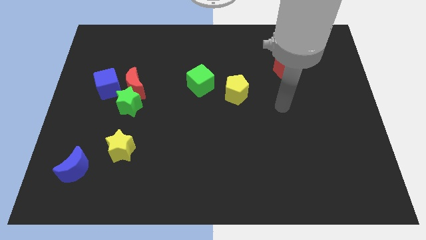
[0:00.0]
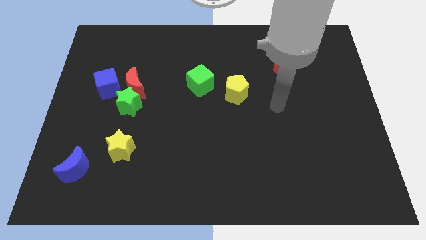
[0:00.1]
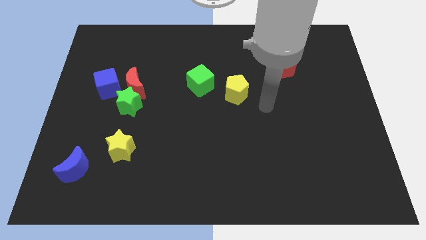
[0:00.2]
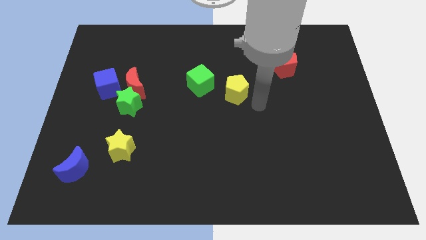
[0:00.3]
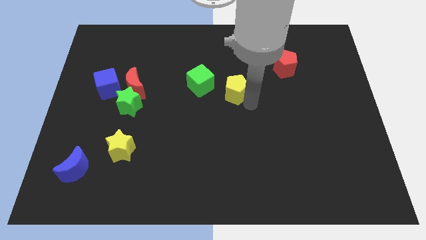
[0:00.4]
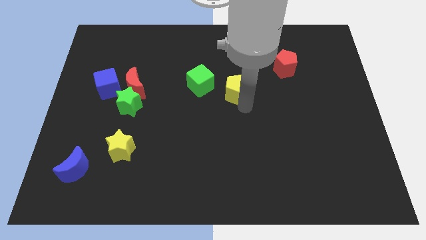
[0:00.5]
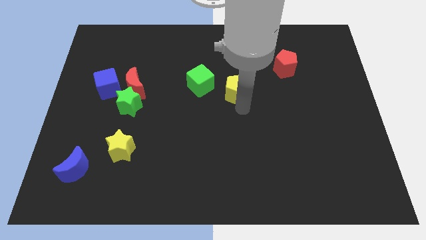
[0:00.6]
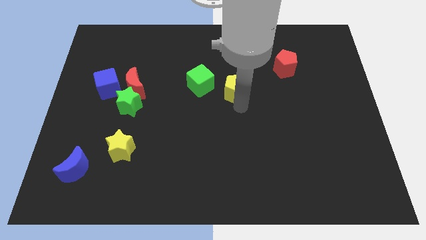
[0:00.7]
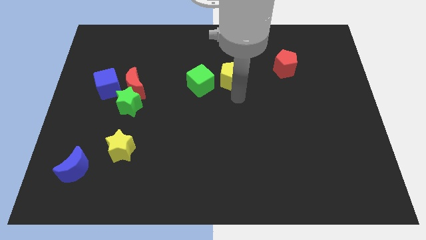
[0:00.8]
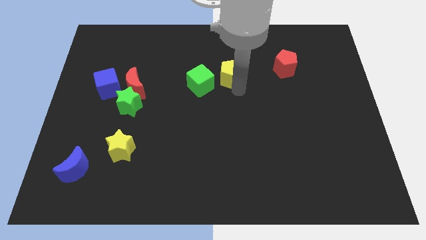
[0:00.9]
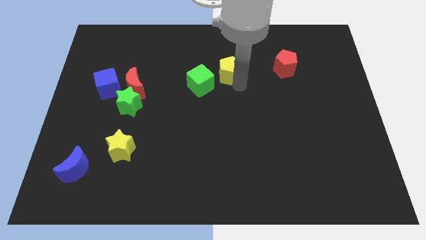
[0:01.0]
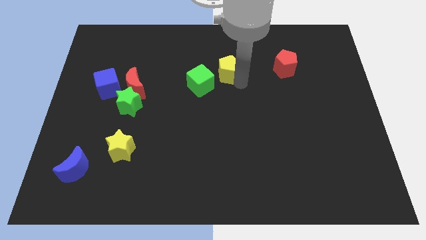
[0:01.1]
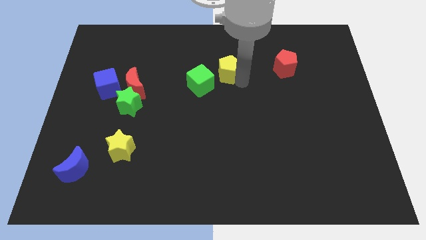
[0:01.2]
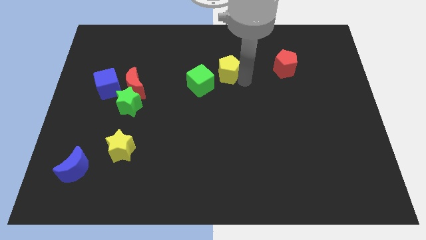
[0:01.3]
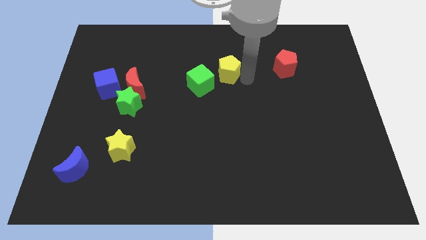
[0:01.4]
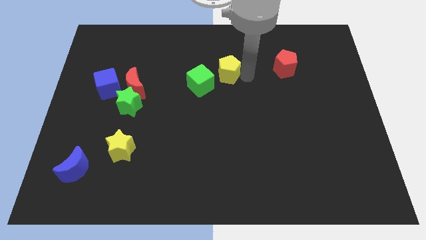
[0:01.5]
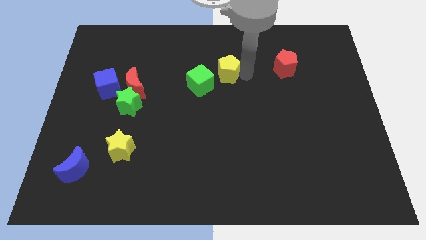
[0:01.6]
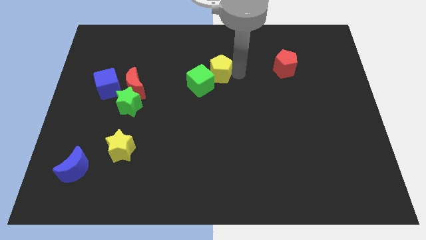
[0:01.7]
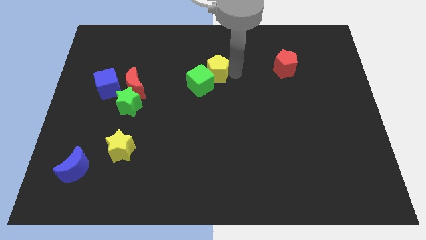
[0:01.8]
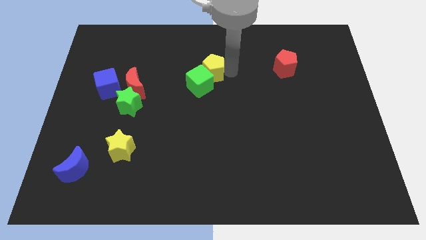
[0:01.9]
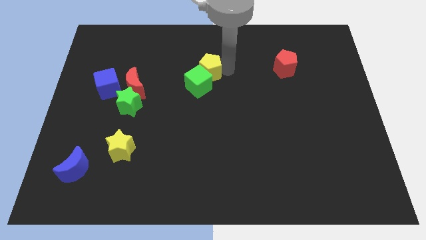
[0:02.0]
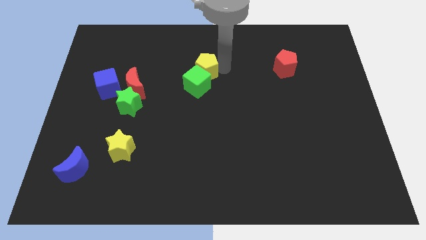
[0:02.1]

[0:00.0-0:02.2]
push yellow pentagon into the green cube

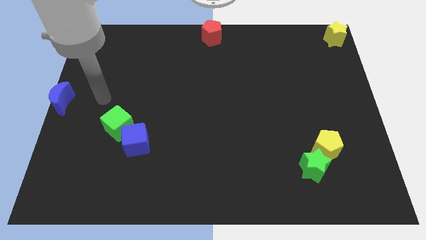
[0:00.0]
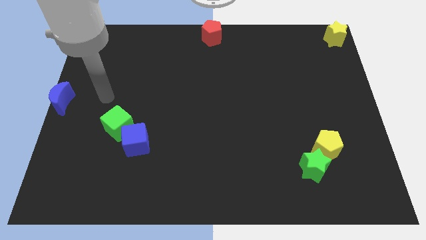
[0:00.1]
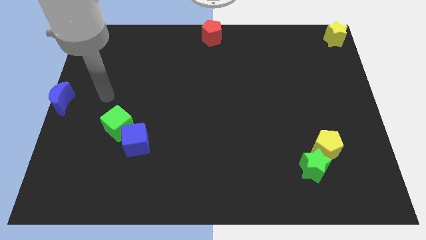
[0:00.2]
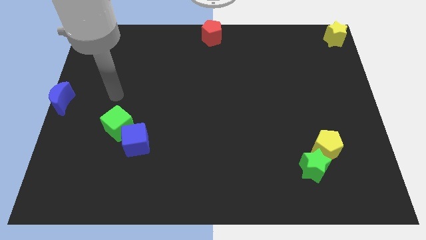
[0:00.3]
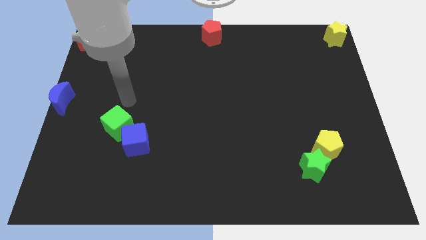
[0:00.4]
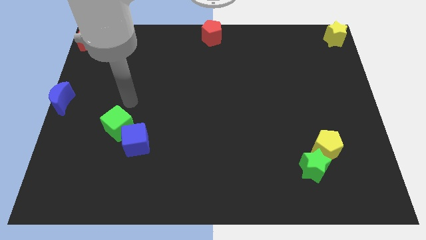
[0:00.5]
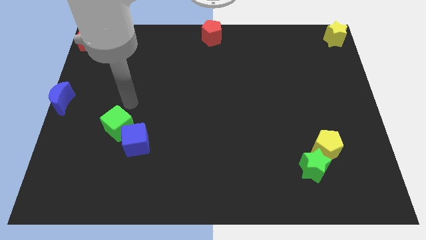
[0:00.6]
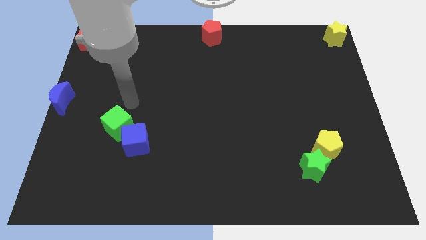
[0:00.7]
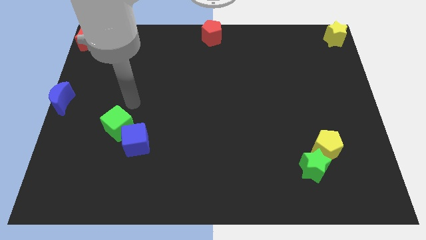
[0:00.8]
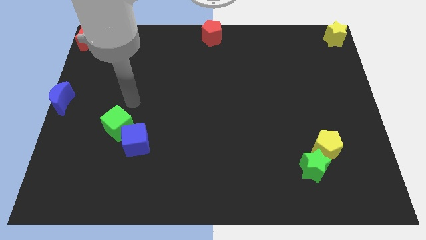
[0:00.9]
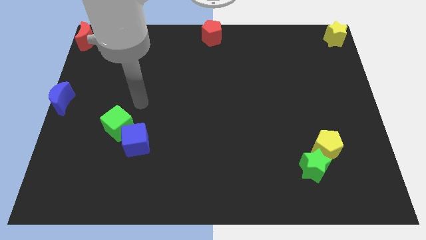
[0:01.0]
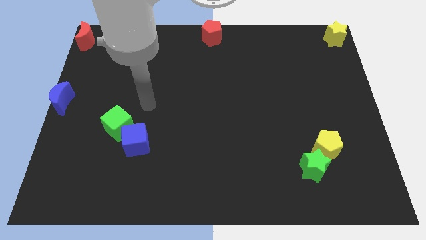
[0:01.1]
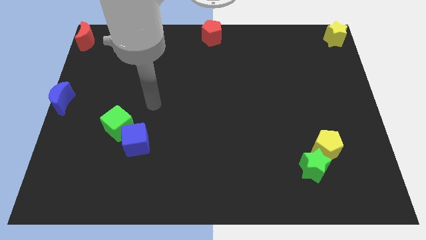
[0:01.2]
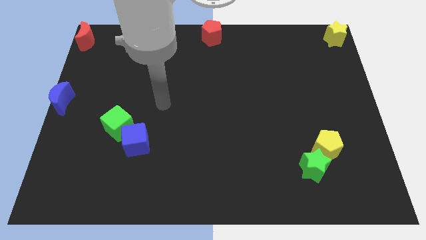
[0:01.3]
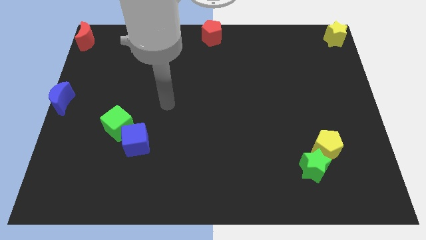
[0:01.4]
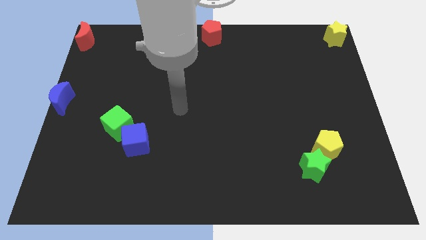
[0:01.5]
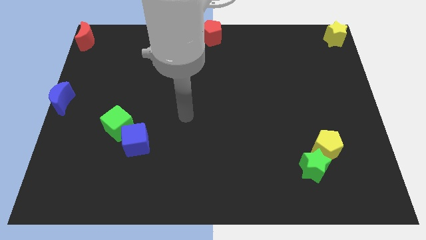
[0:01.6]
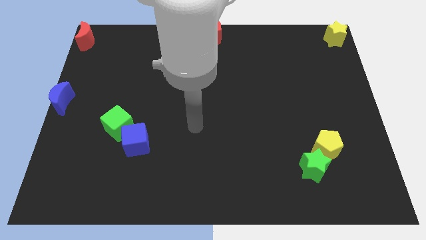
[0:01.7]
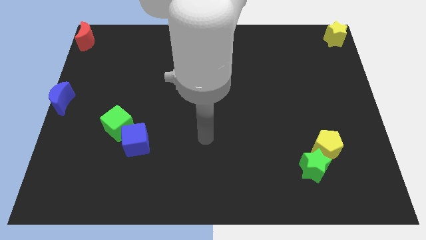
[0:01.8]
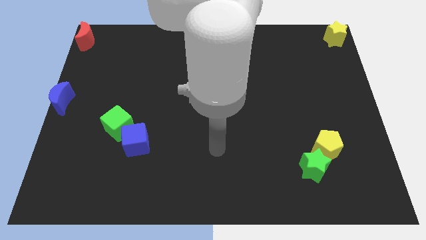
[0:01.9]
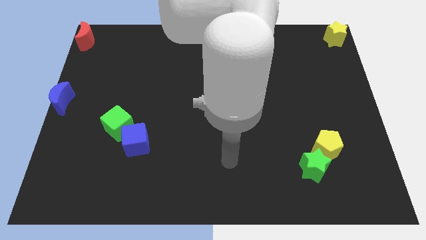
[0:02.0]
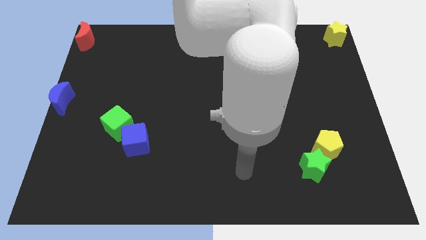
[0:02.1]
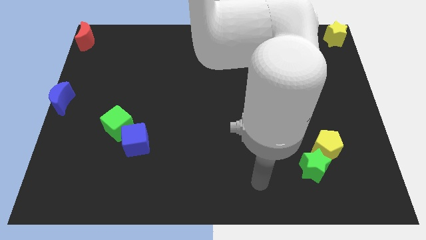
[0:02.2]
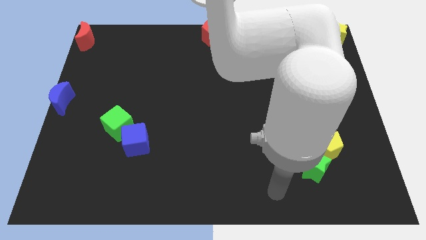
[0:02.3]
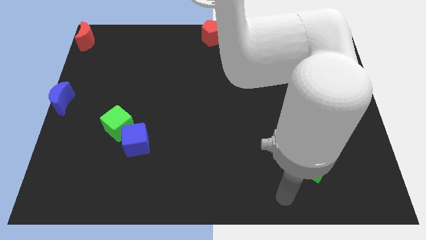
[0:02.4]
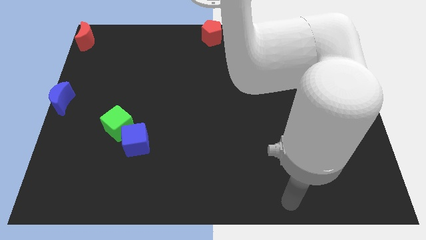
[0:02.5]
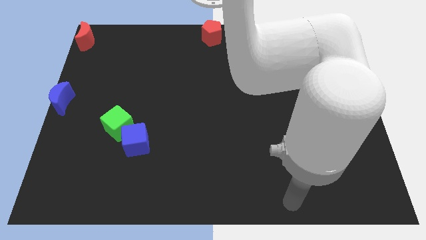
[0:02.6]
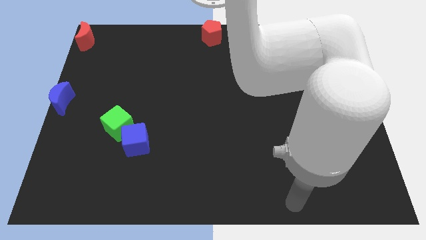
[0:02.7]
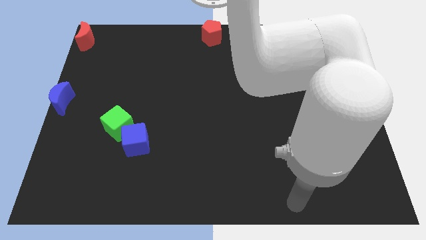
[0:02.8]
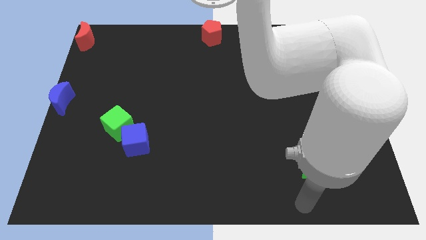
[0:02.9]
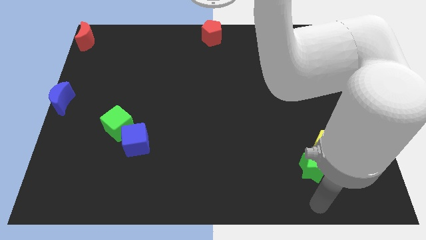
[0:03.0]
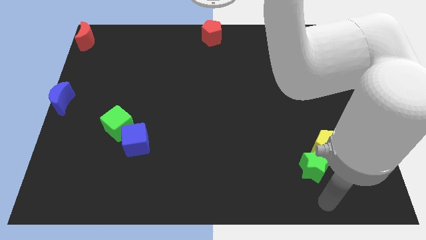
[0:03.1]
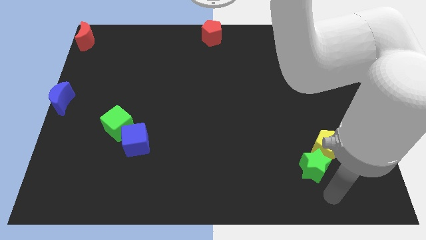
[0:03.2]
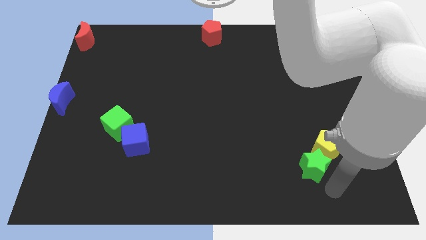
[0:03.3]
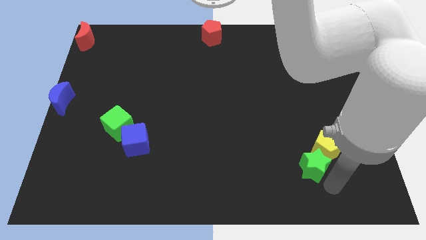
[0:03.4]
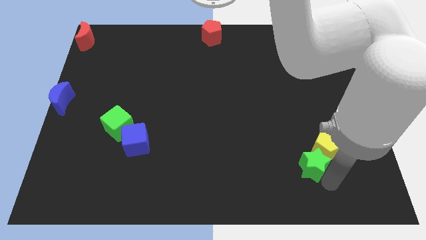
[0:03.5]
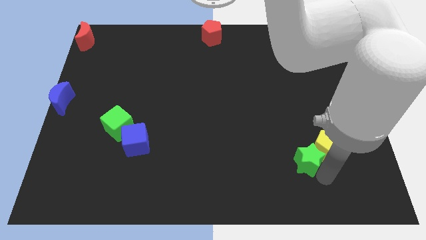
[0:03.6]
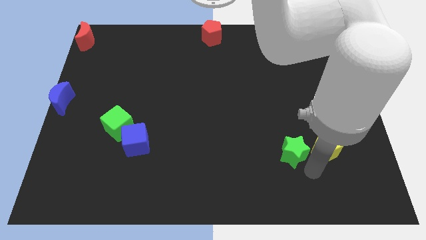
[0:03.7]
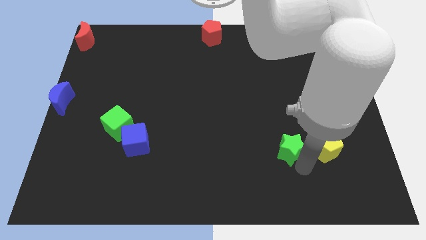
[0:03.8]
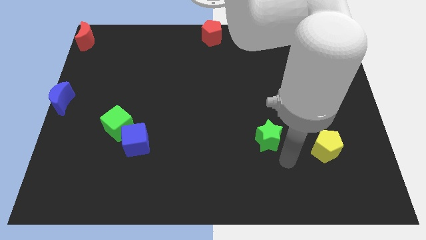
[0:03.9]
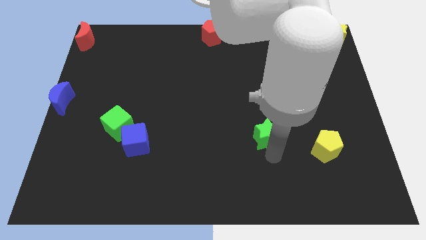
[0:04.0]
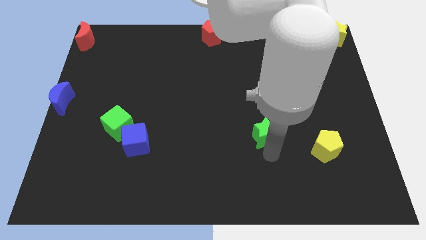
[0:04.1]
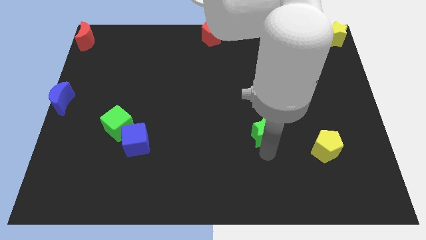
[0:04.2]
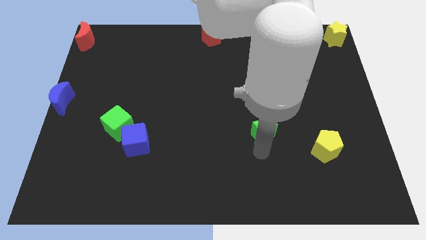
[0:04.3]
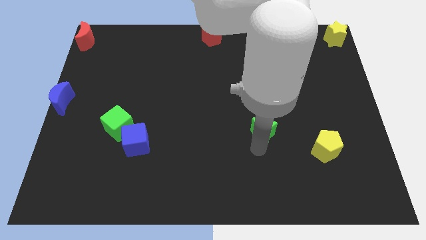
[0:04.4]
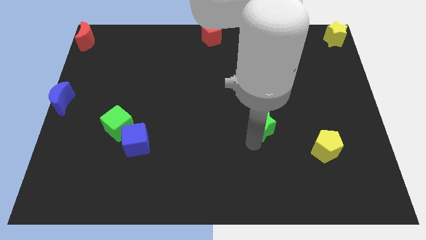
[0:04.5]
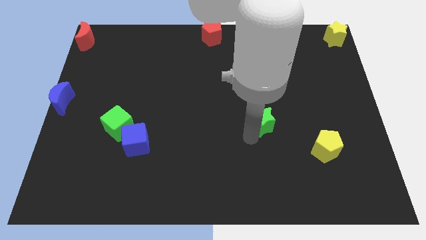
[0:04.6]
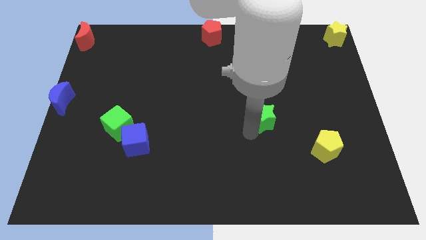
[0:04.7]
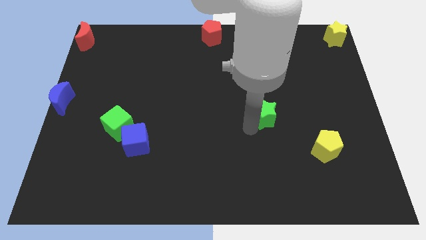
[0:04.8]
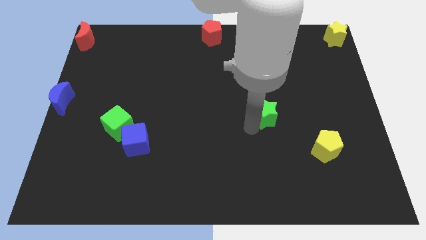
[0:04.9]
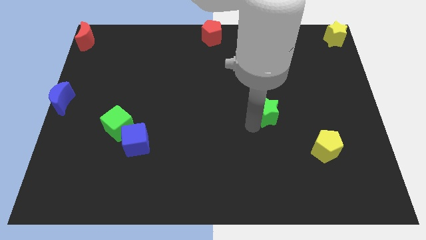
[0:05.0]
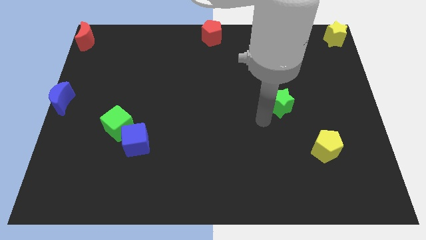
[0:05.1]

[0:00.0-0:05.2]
push the green star to the top left of the yellow pentagon

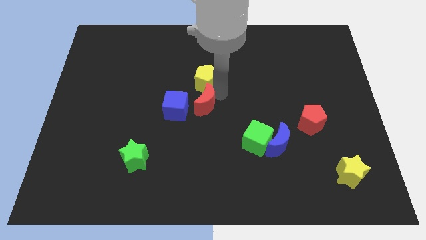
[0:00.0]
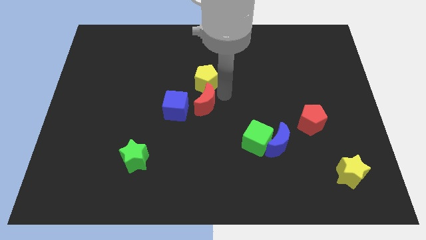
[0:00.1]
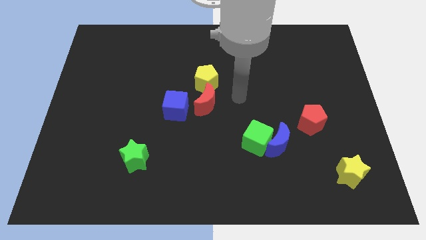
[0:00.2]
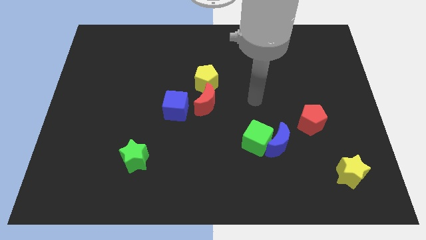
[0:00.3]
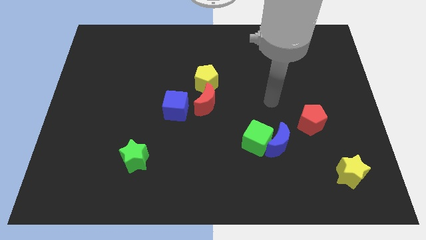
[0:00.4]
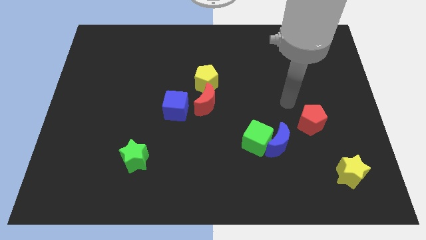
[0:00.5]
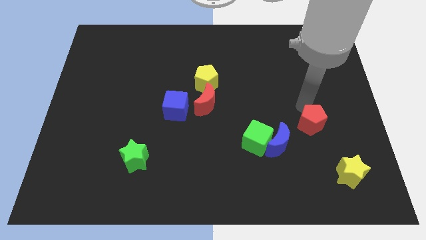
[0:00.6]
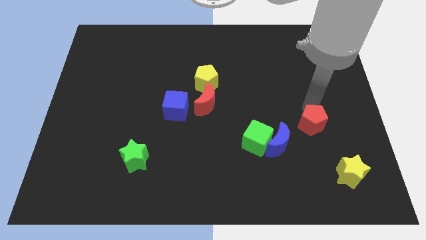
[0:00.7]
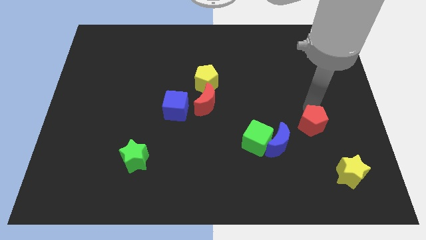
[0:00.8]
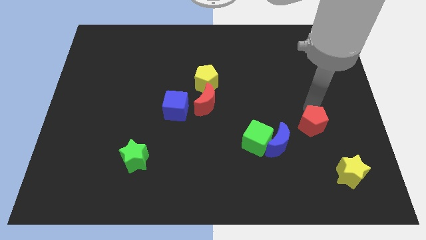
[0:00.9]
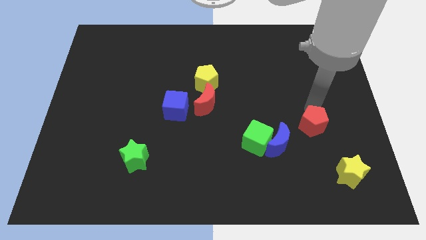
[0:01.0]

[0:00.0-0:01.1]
tap on the top edge of red pentagon

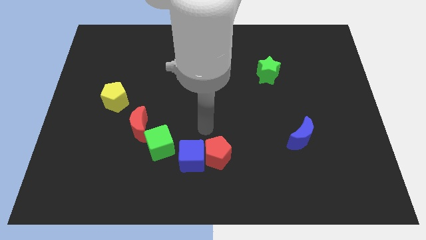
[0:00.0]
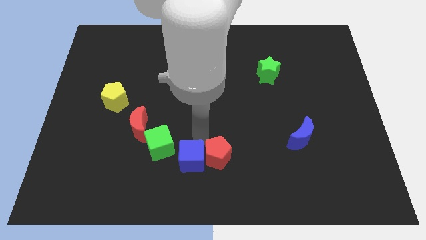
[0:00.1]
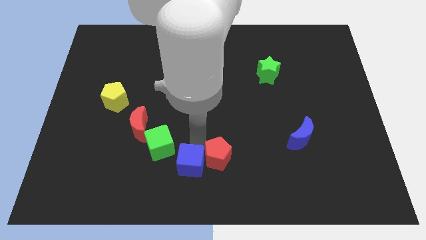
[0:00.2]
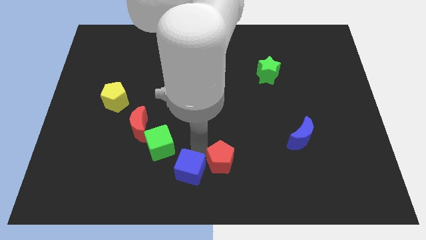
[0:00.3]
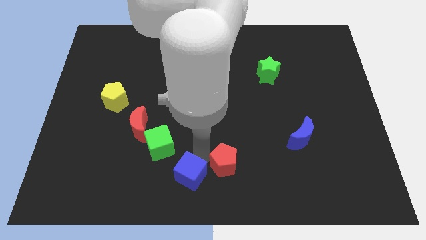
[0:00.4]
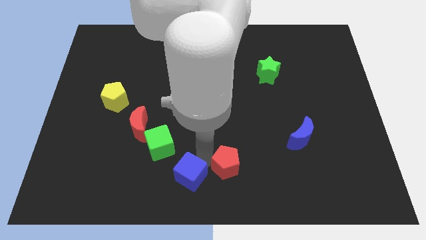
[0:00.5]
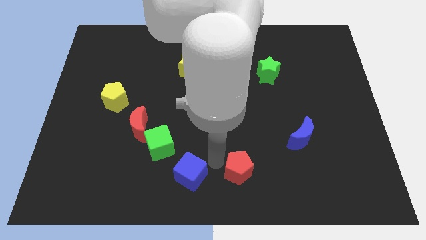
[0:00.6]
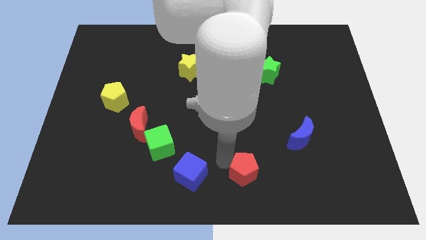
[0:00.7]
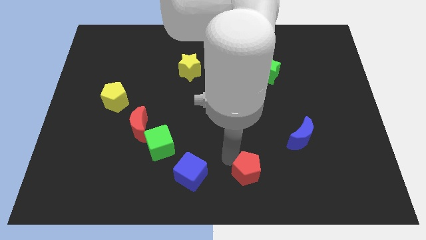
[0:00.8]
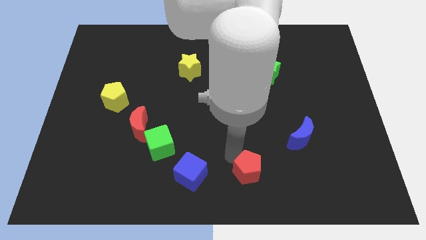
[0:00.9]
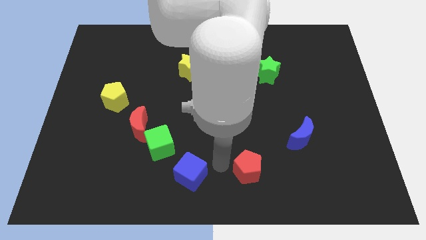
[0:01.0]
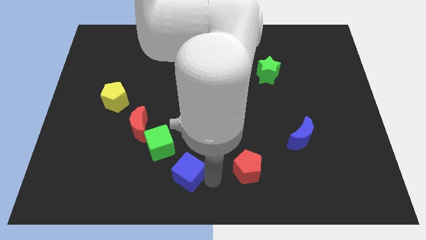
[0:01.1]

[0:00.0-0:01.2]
separate the red pentagon and blue cube
